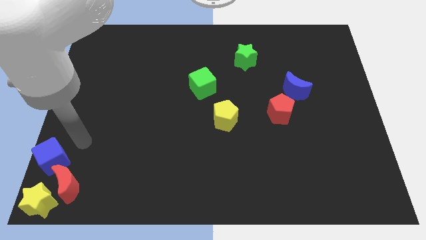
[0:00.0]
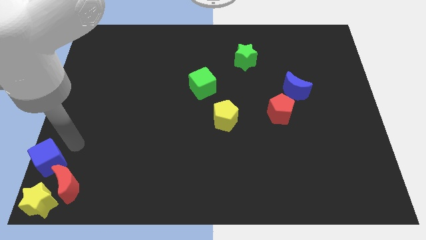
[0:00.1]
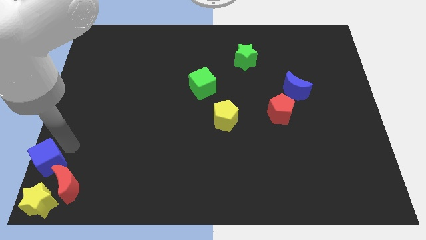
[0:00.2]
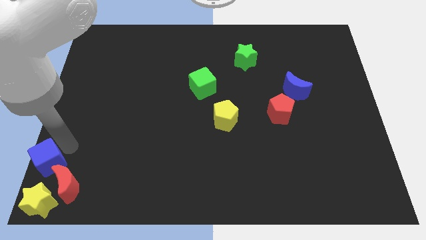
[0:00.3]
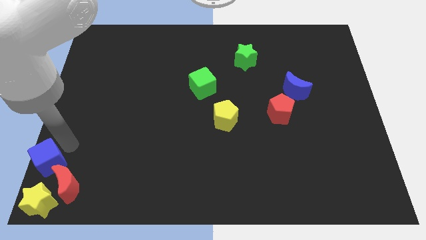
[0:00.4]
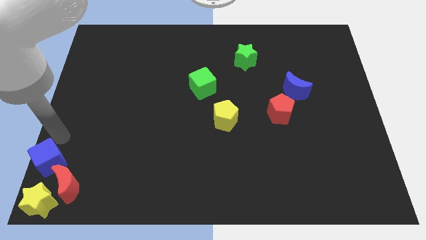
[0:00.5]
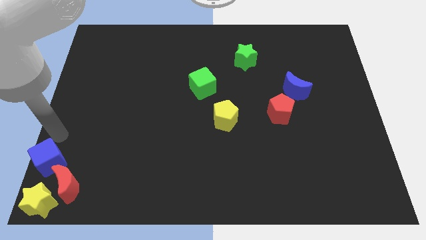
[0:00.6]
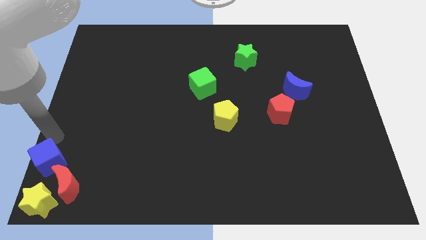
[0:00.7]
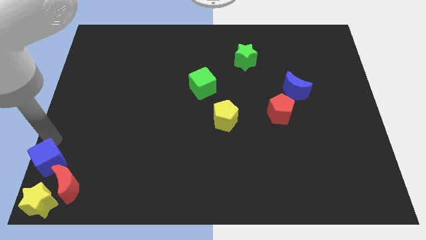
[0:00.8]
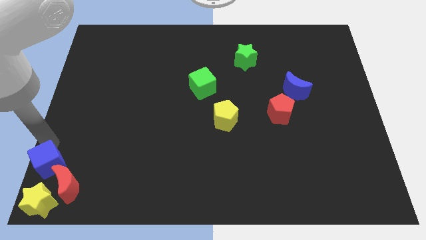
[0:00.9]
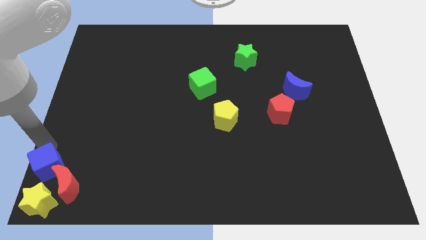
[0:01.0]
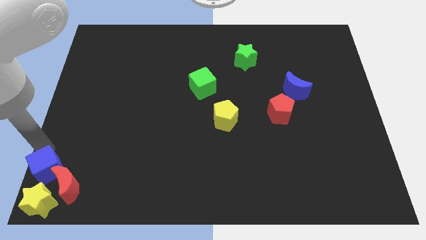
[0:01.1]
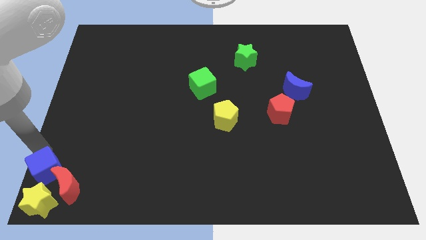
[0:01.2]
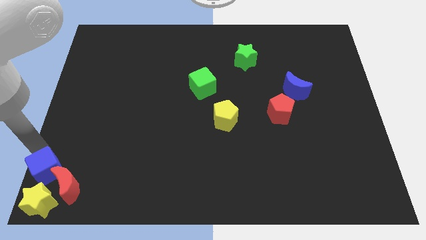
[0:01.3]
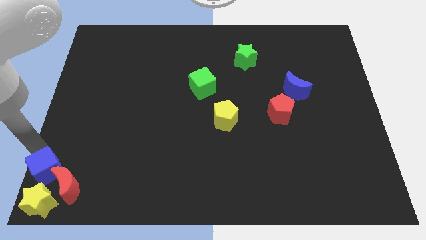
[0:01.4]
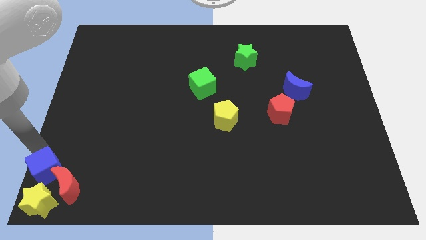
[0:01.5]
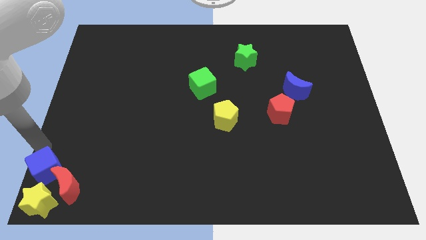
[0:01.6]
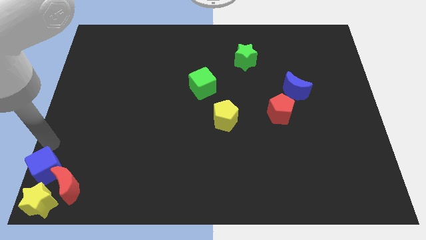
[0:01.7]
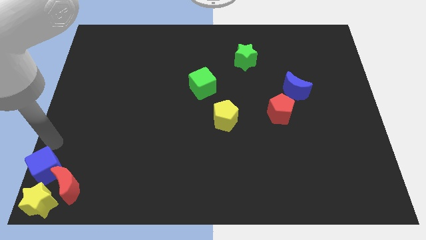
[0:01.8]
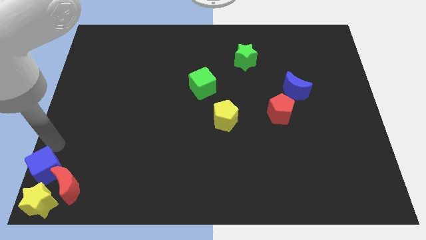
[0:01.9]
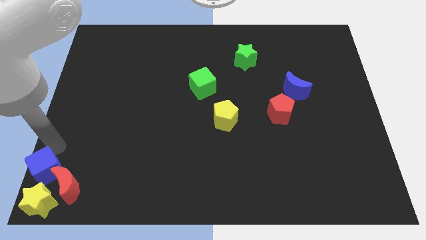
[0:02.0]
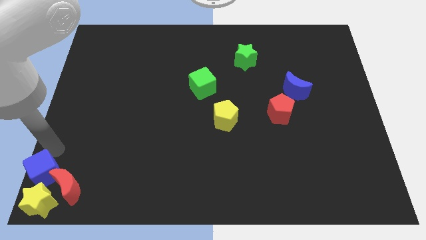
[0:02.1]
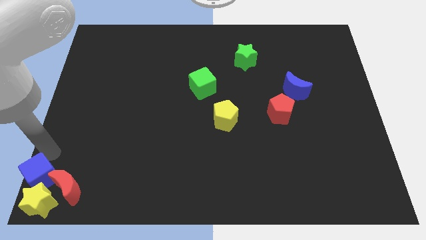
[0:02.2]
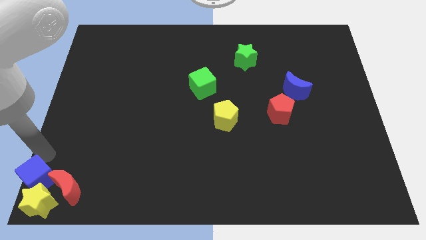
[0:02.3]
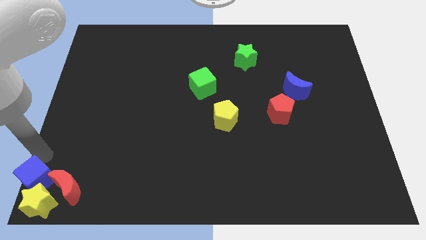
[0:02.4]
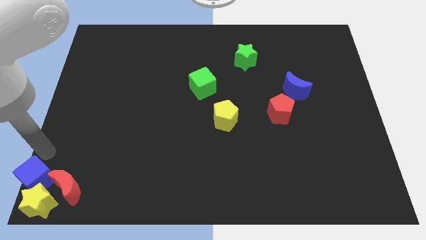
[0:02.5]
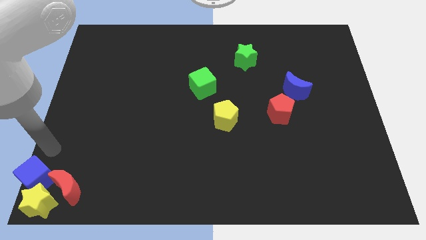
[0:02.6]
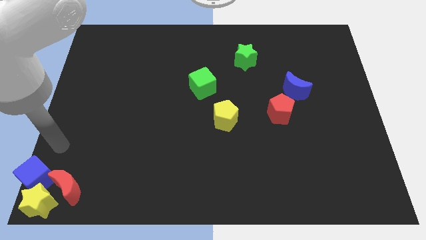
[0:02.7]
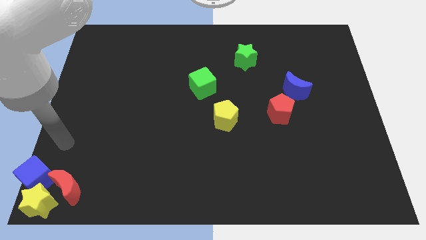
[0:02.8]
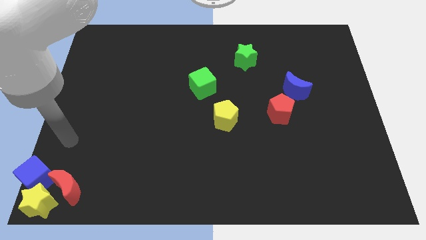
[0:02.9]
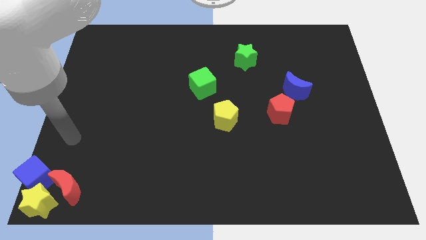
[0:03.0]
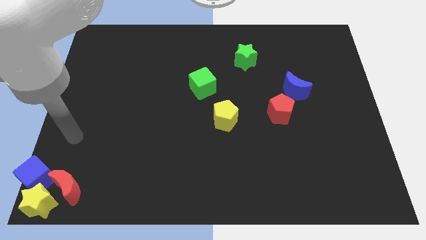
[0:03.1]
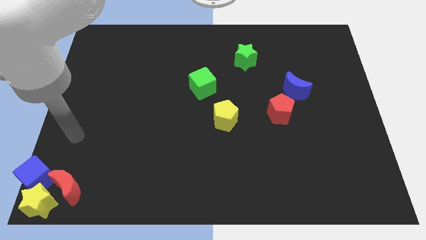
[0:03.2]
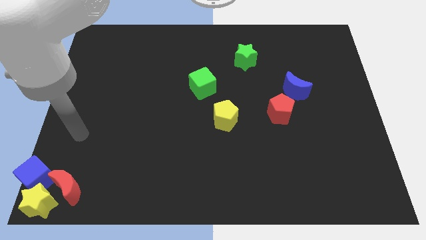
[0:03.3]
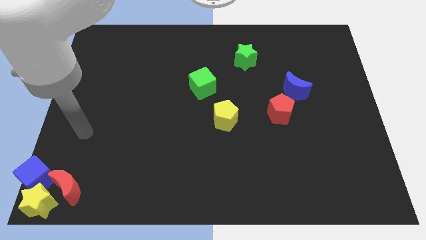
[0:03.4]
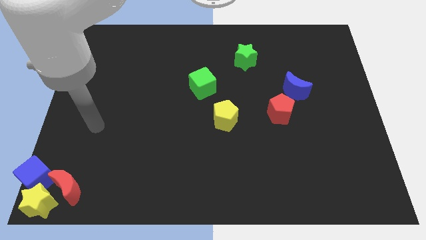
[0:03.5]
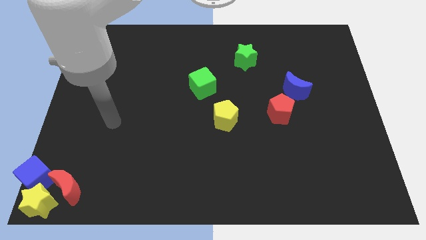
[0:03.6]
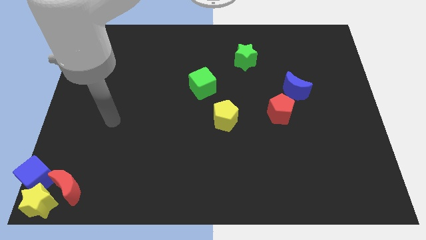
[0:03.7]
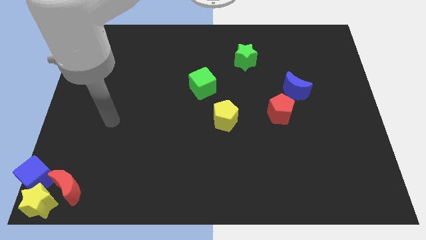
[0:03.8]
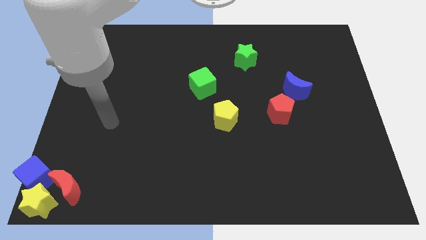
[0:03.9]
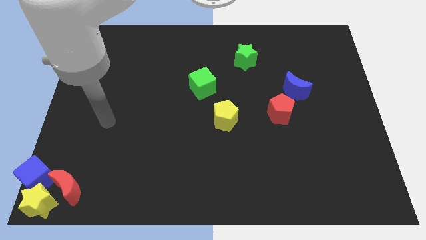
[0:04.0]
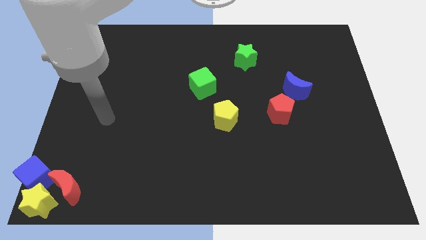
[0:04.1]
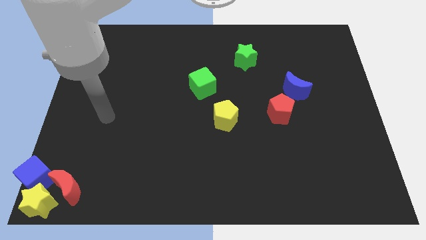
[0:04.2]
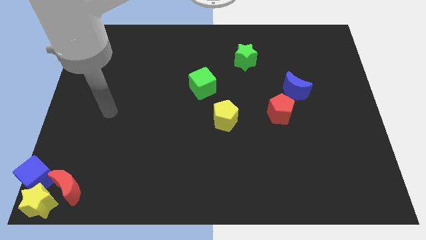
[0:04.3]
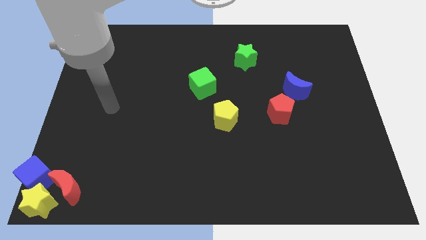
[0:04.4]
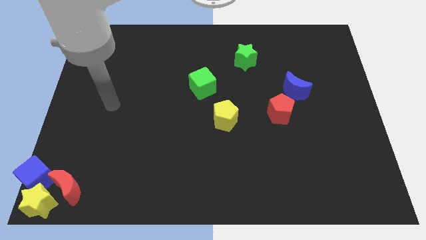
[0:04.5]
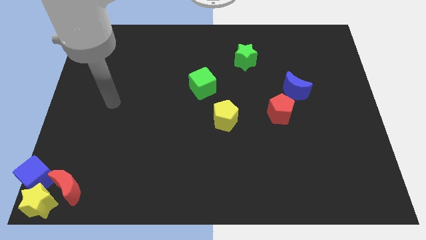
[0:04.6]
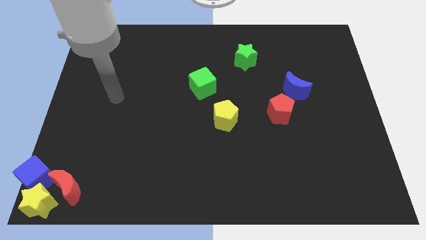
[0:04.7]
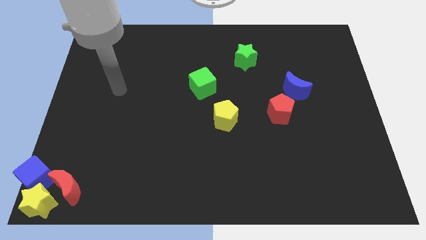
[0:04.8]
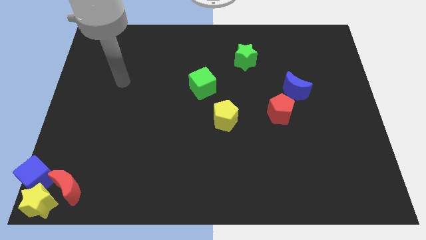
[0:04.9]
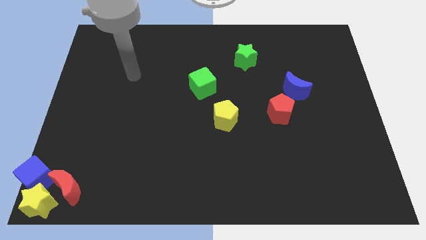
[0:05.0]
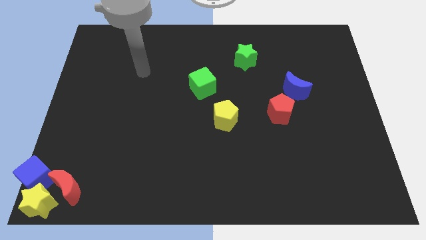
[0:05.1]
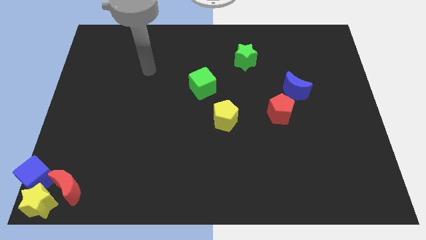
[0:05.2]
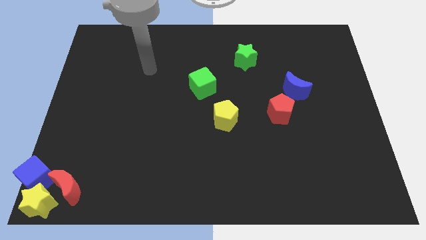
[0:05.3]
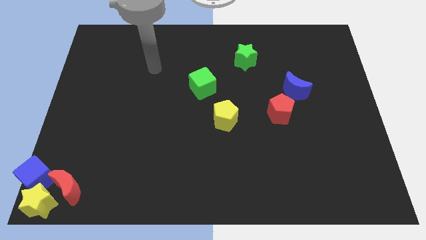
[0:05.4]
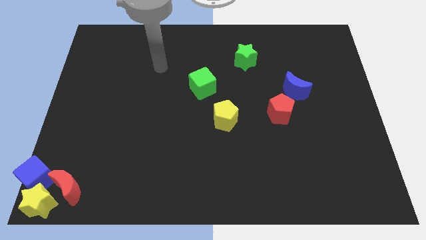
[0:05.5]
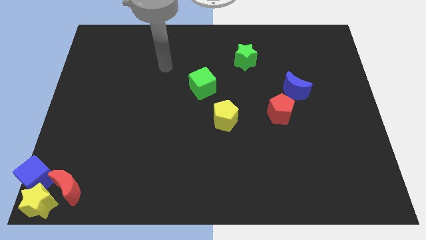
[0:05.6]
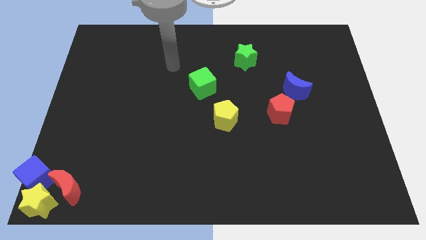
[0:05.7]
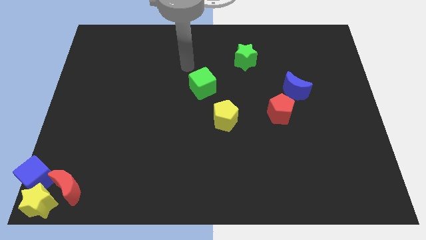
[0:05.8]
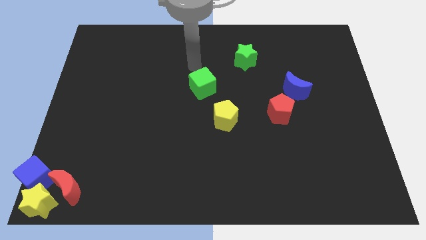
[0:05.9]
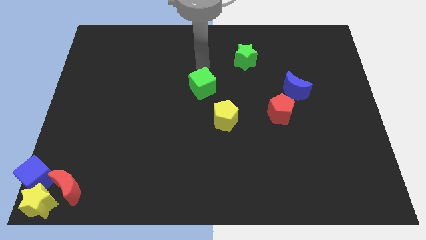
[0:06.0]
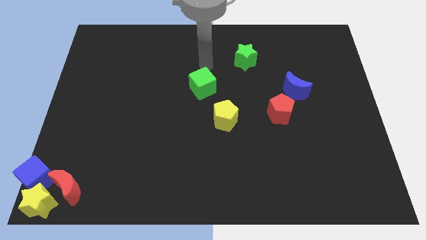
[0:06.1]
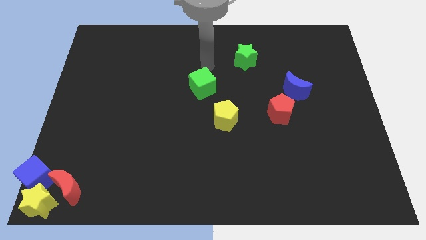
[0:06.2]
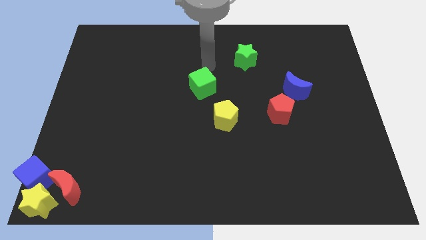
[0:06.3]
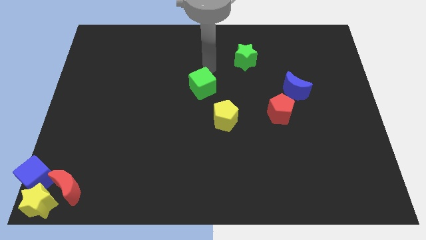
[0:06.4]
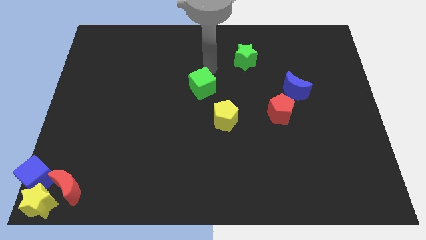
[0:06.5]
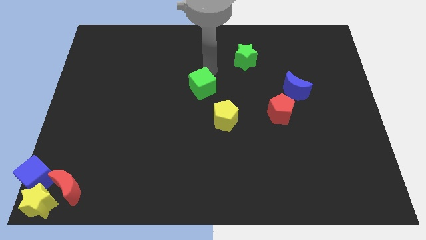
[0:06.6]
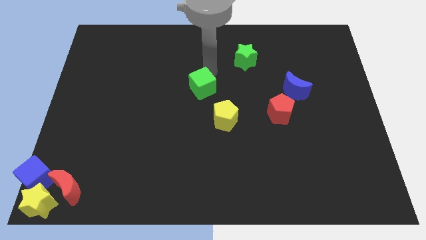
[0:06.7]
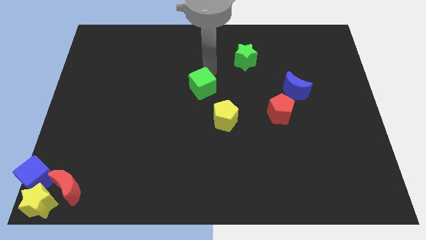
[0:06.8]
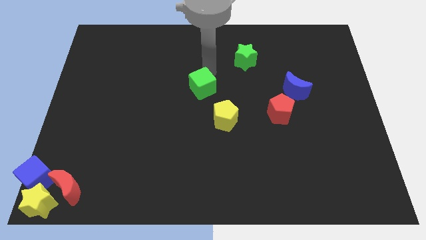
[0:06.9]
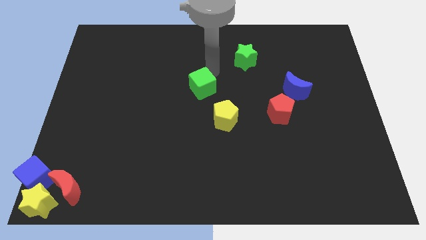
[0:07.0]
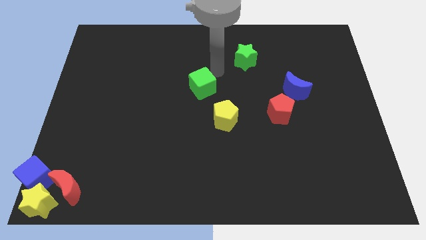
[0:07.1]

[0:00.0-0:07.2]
move your arm towards the green cube

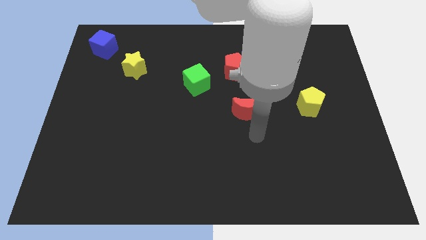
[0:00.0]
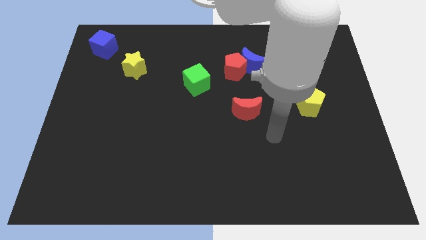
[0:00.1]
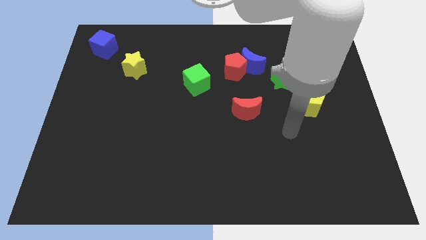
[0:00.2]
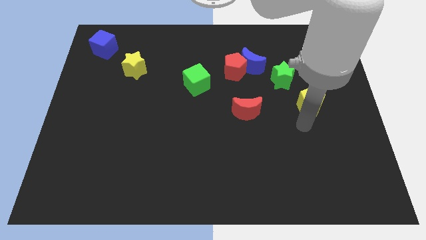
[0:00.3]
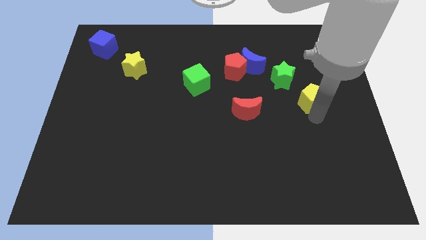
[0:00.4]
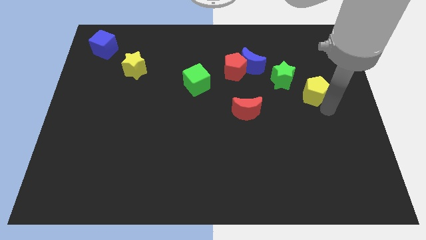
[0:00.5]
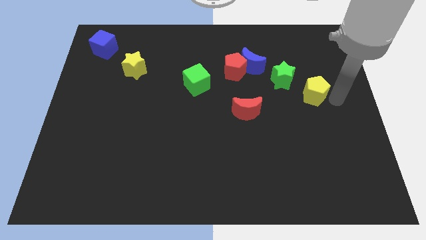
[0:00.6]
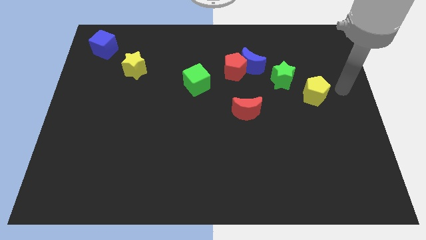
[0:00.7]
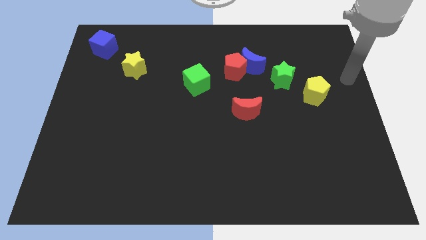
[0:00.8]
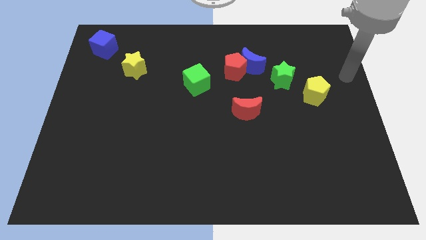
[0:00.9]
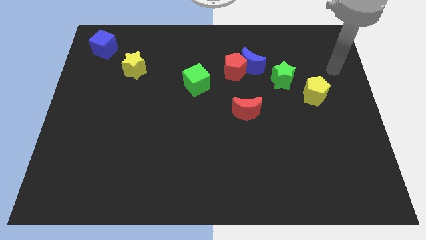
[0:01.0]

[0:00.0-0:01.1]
slightly move the yellow pentagon to the left of the board

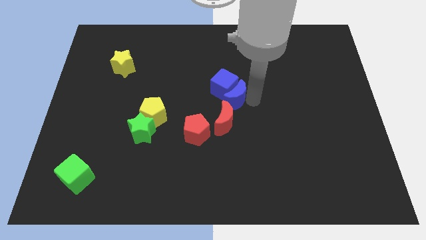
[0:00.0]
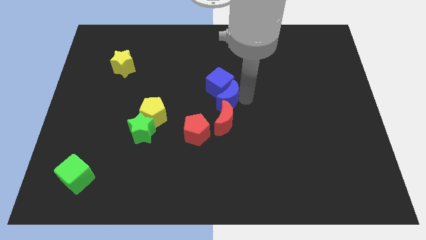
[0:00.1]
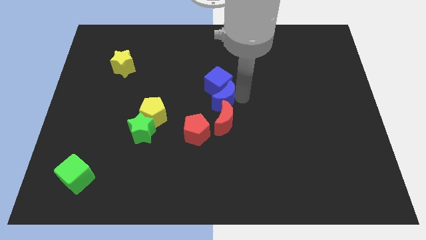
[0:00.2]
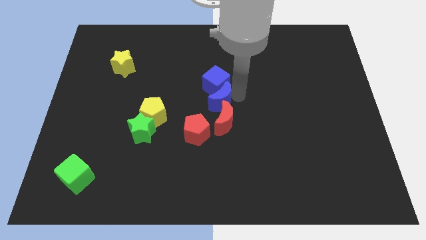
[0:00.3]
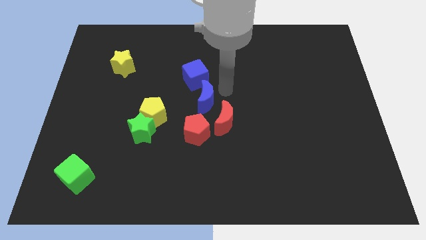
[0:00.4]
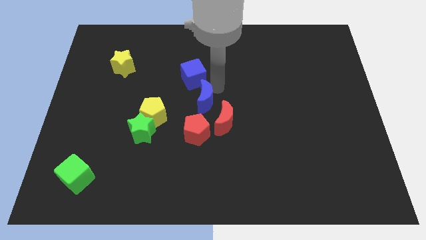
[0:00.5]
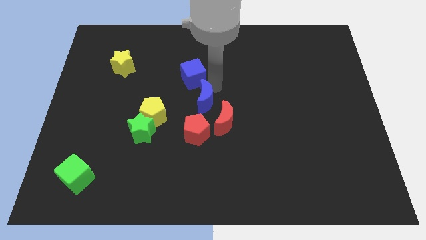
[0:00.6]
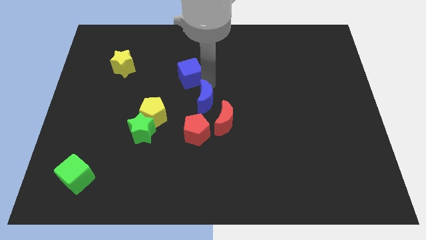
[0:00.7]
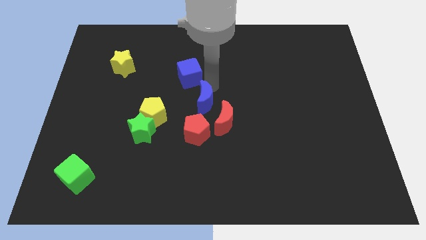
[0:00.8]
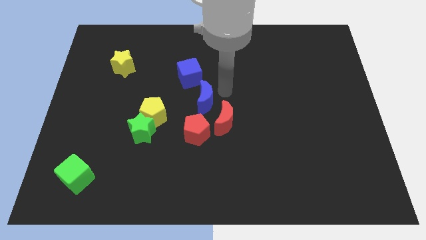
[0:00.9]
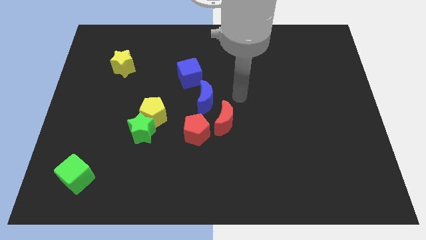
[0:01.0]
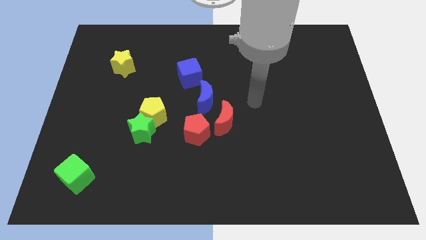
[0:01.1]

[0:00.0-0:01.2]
place blue crescent above red pentagon
